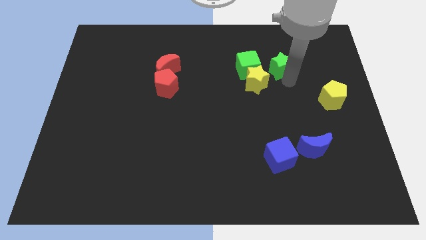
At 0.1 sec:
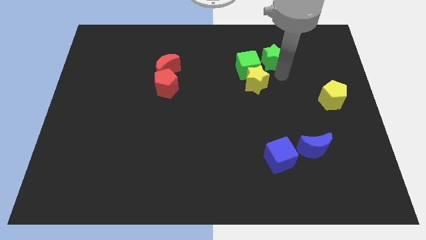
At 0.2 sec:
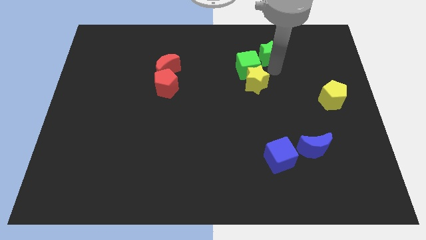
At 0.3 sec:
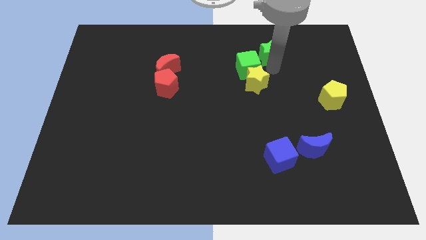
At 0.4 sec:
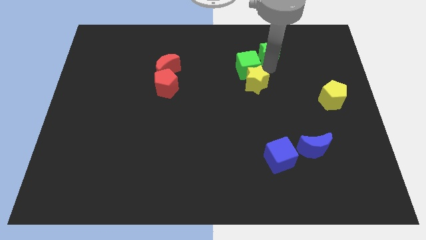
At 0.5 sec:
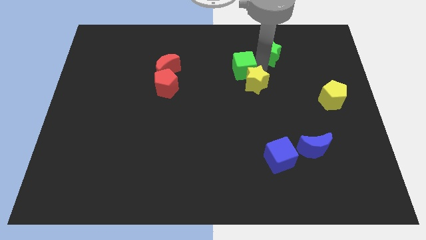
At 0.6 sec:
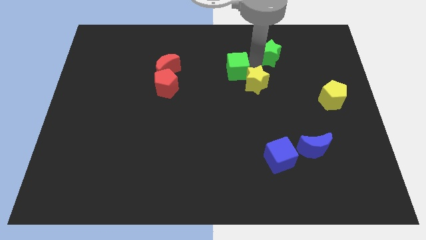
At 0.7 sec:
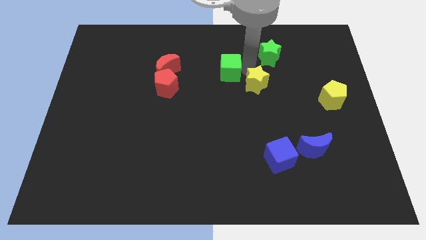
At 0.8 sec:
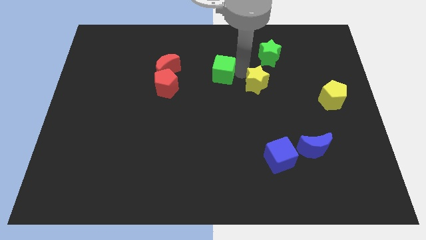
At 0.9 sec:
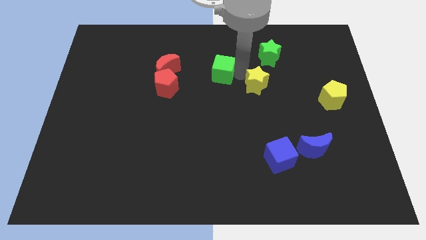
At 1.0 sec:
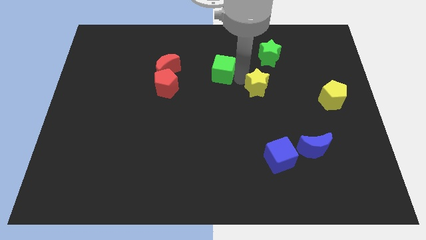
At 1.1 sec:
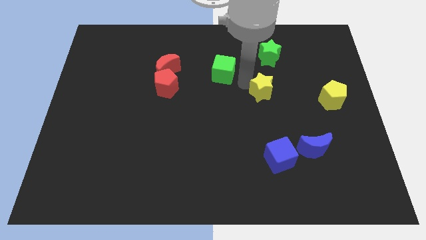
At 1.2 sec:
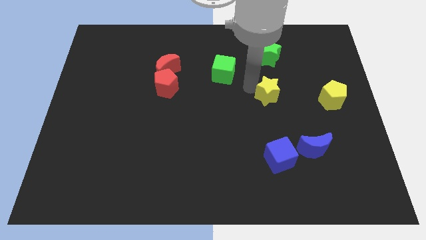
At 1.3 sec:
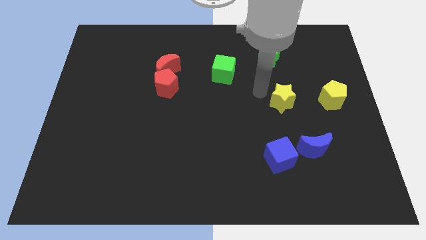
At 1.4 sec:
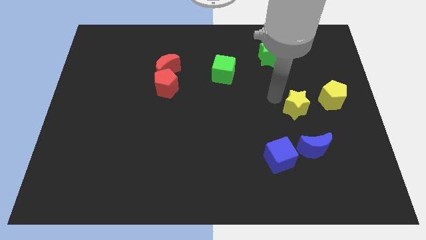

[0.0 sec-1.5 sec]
separate the yellow star with green star

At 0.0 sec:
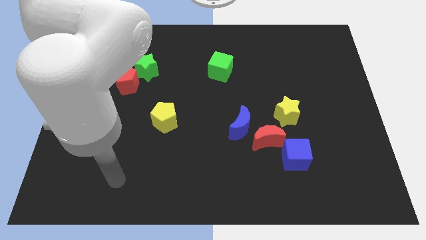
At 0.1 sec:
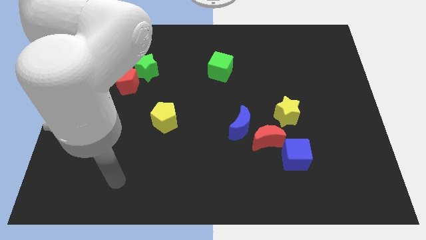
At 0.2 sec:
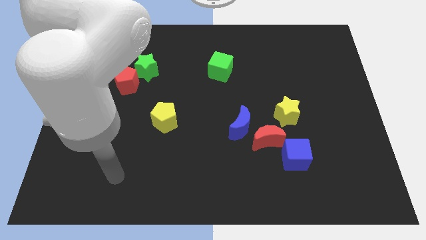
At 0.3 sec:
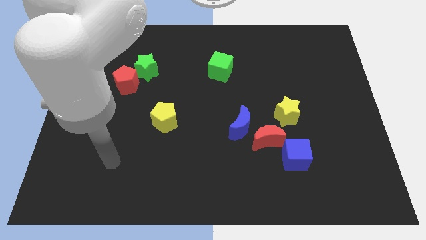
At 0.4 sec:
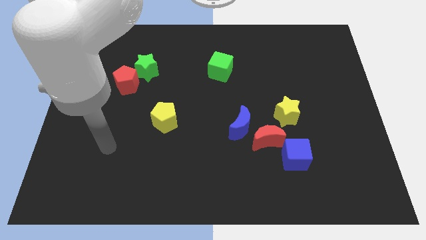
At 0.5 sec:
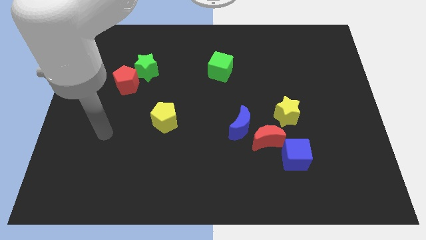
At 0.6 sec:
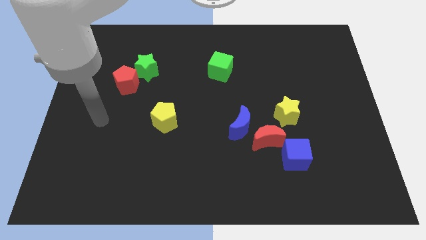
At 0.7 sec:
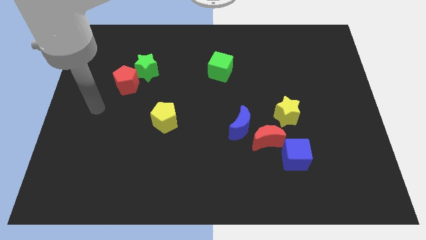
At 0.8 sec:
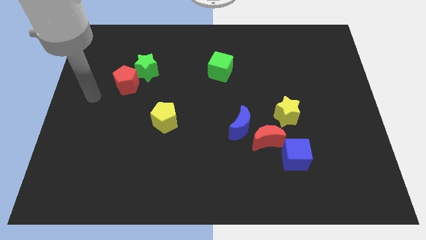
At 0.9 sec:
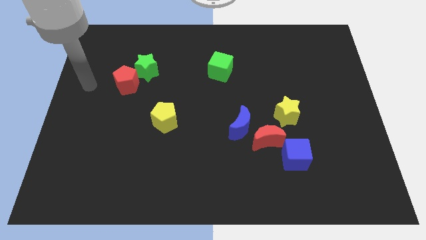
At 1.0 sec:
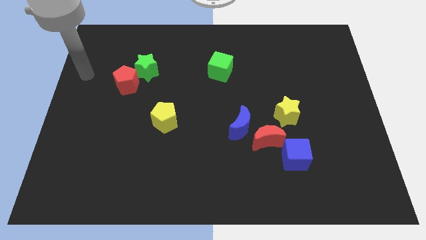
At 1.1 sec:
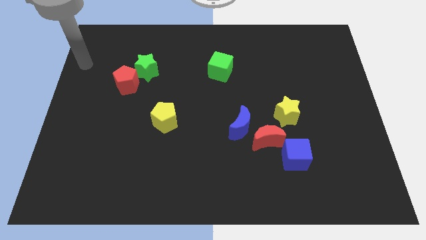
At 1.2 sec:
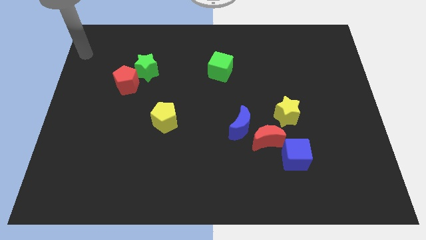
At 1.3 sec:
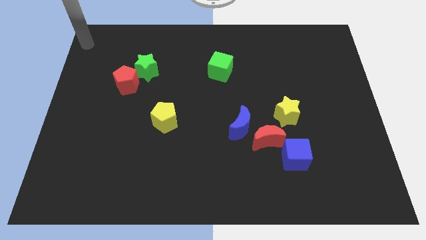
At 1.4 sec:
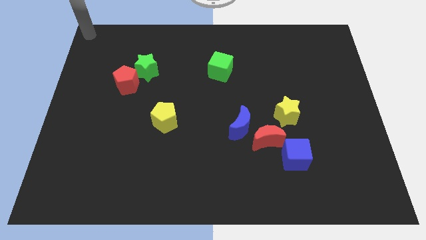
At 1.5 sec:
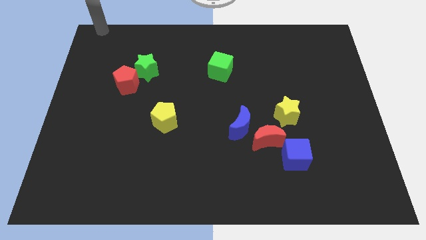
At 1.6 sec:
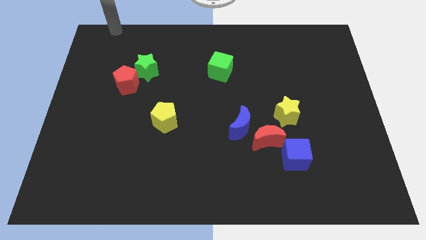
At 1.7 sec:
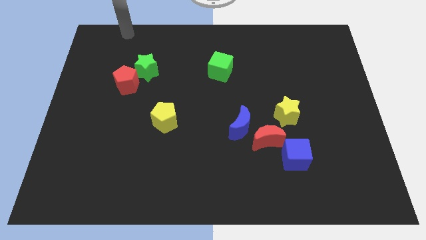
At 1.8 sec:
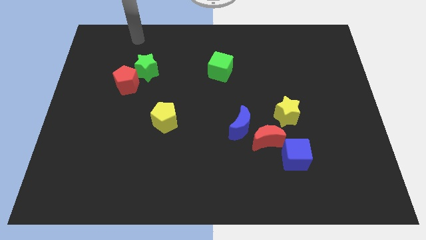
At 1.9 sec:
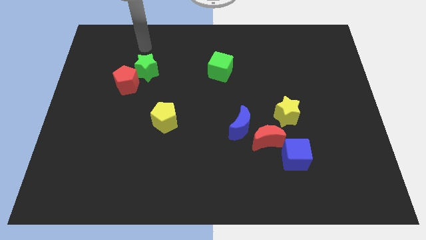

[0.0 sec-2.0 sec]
place your arm above the green star

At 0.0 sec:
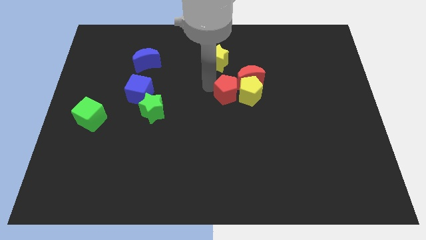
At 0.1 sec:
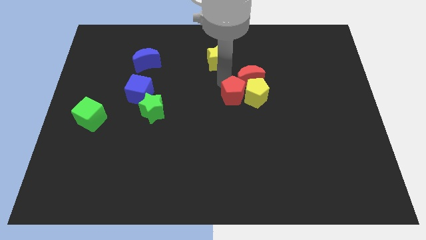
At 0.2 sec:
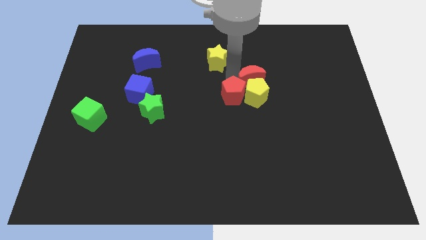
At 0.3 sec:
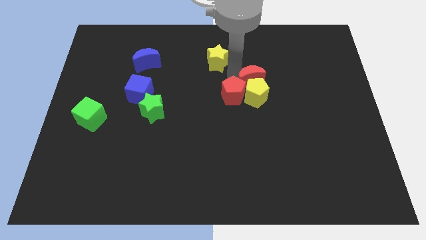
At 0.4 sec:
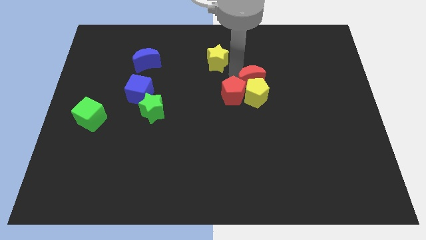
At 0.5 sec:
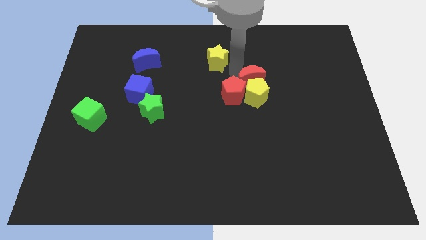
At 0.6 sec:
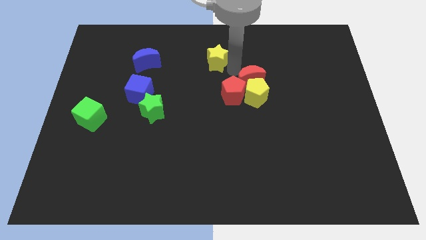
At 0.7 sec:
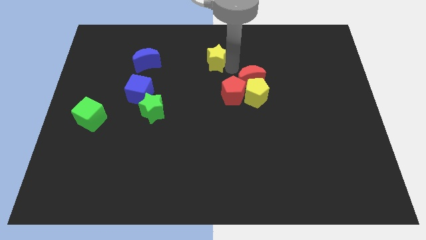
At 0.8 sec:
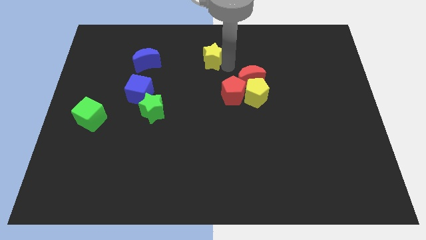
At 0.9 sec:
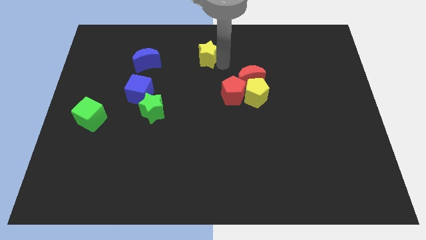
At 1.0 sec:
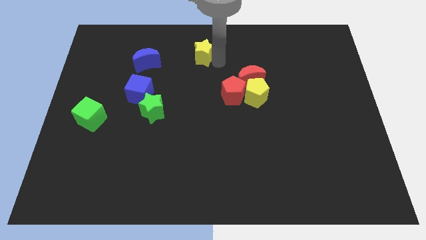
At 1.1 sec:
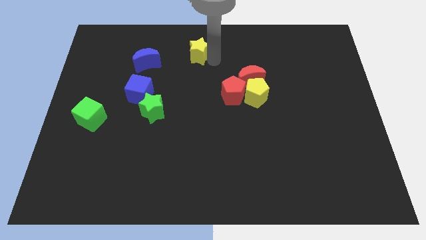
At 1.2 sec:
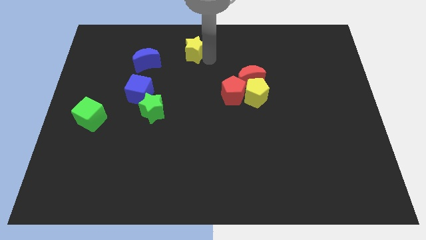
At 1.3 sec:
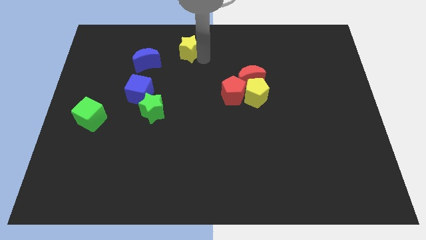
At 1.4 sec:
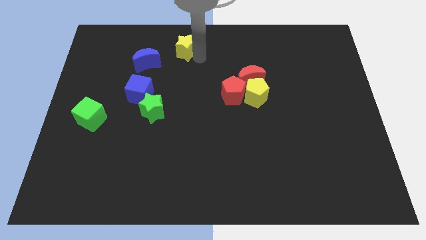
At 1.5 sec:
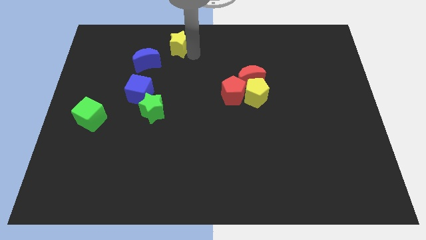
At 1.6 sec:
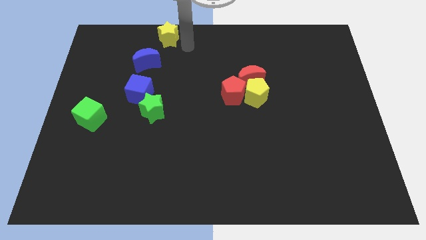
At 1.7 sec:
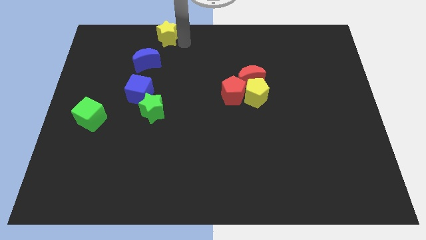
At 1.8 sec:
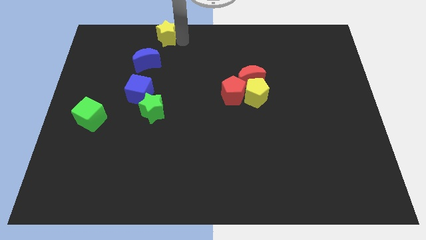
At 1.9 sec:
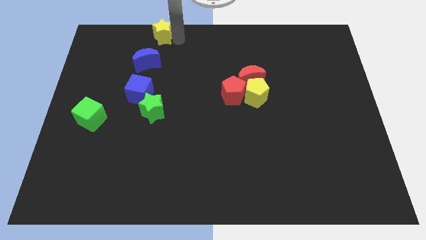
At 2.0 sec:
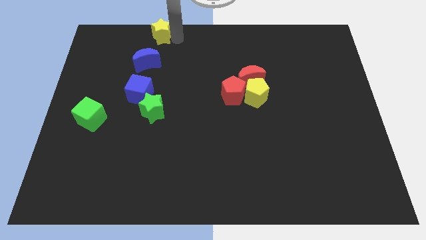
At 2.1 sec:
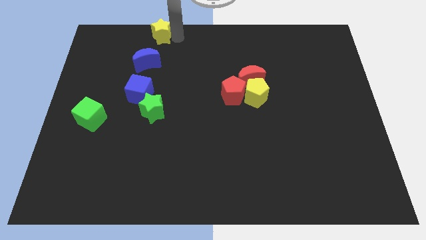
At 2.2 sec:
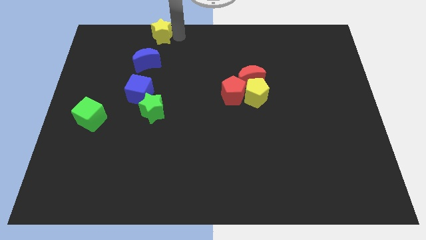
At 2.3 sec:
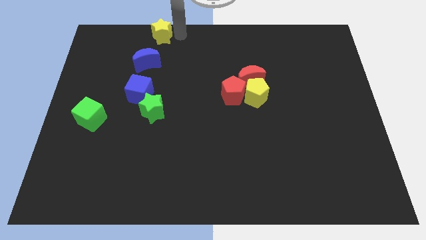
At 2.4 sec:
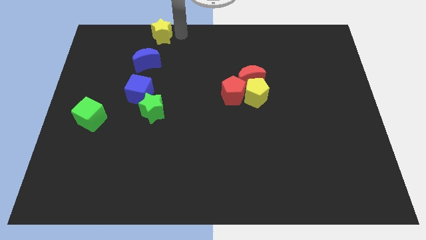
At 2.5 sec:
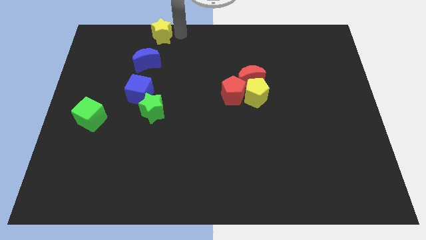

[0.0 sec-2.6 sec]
place the yellow star above the blue moon

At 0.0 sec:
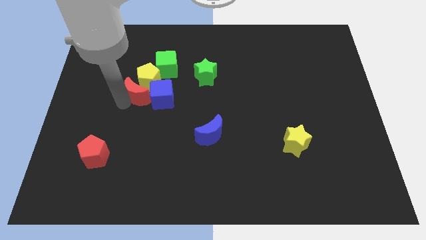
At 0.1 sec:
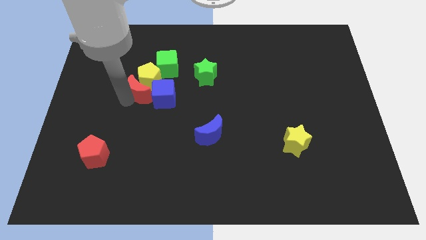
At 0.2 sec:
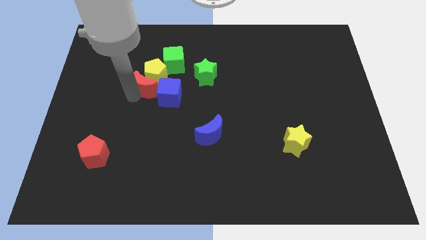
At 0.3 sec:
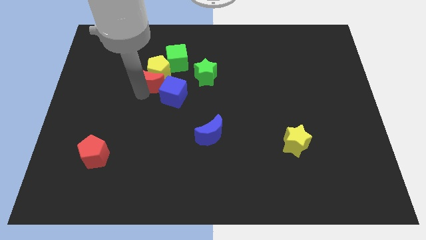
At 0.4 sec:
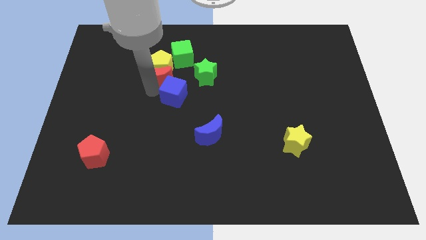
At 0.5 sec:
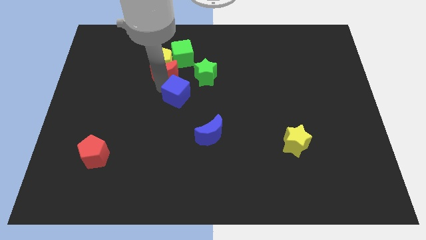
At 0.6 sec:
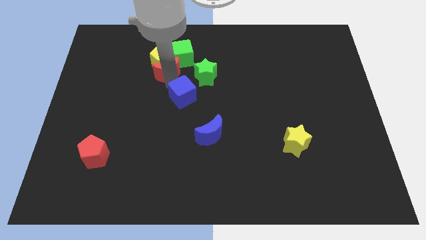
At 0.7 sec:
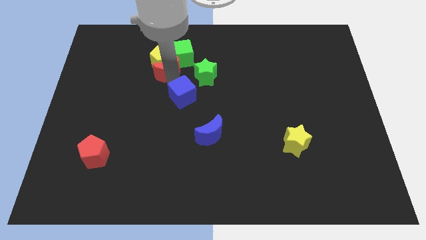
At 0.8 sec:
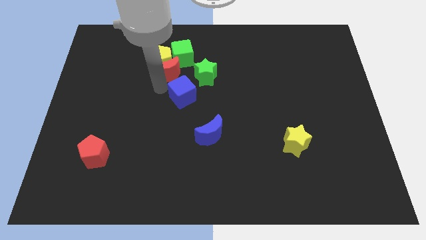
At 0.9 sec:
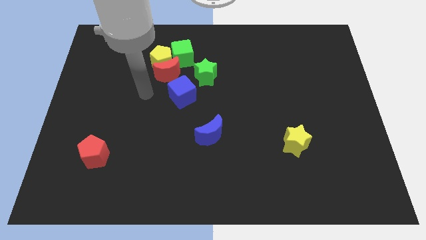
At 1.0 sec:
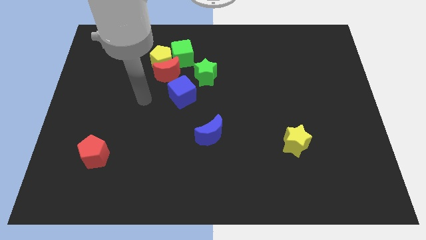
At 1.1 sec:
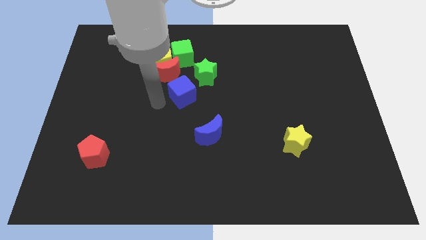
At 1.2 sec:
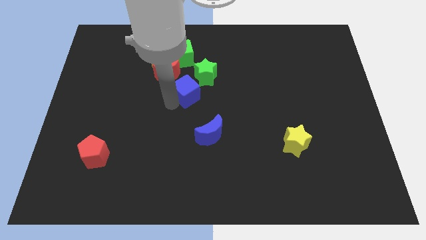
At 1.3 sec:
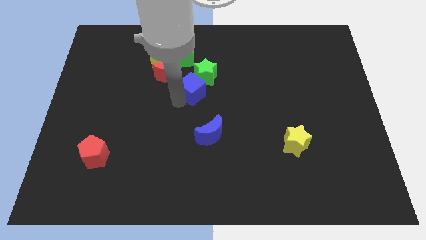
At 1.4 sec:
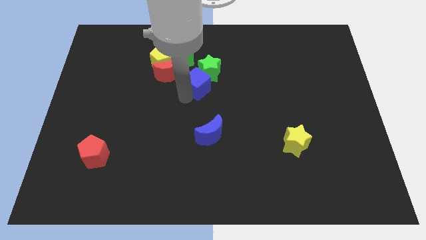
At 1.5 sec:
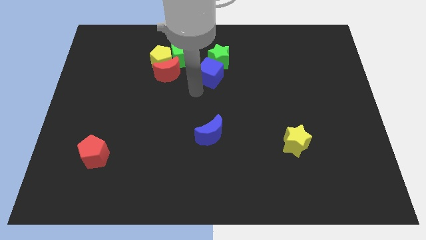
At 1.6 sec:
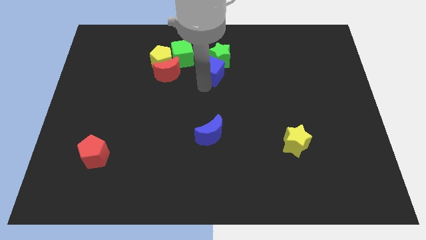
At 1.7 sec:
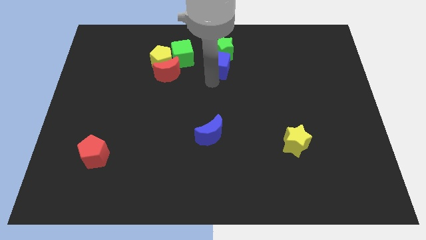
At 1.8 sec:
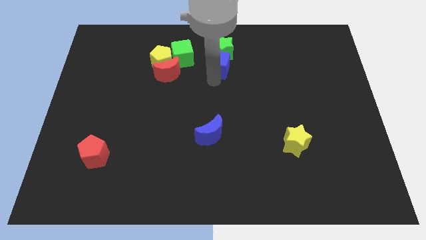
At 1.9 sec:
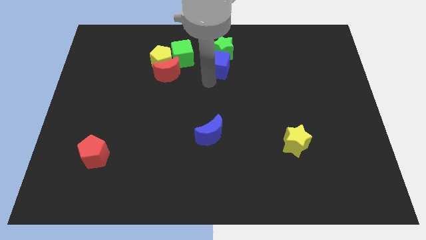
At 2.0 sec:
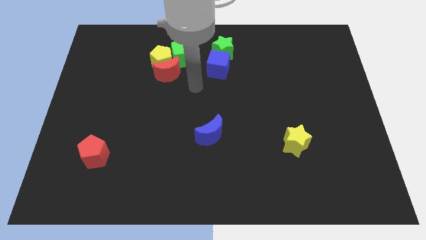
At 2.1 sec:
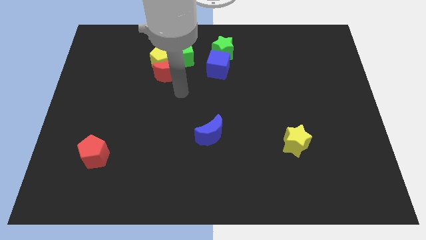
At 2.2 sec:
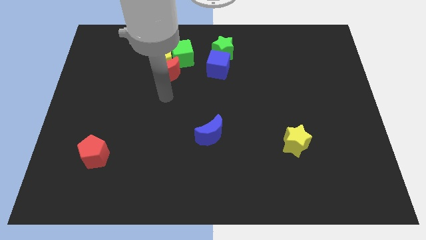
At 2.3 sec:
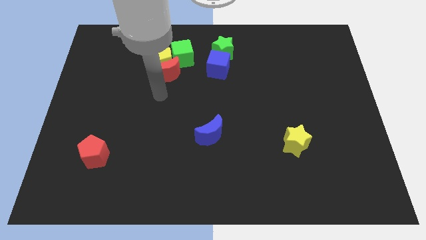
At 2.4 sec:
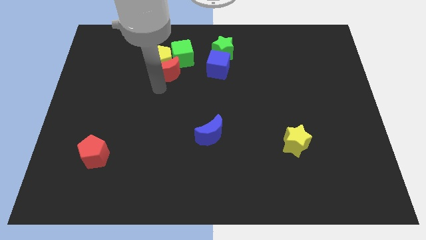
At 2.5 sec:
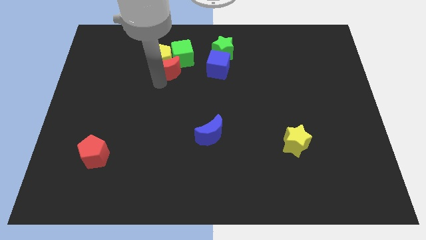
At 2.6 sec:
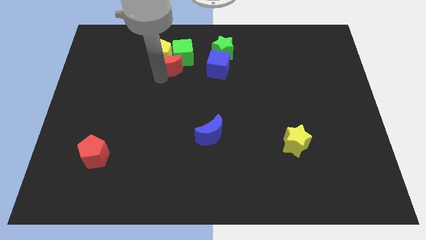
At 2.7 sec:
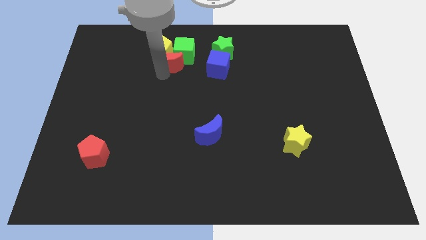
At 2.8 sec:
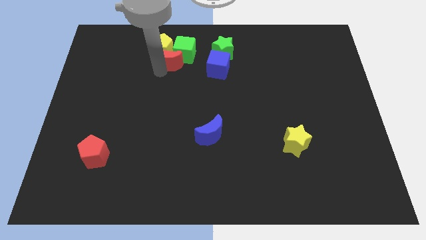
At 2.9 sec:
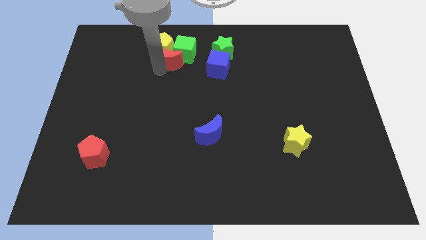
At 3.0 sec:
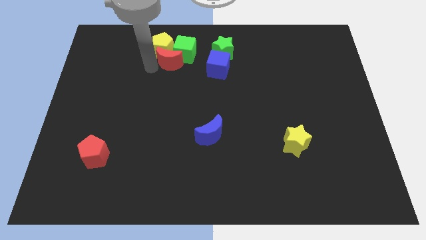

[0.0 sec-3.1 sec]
move the yellow pentagon green blocksand blue cube towards top with red crescent
